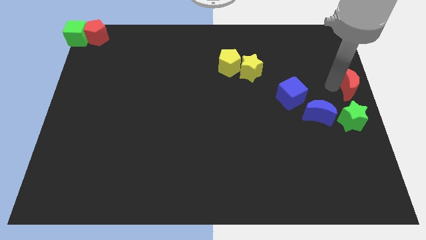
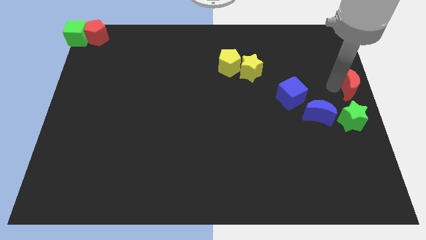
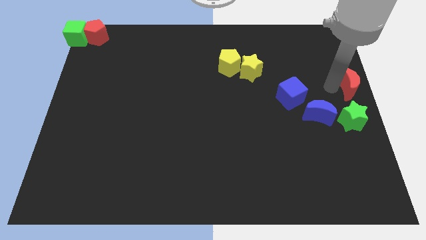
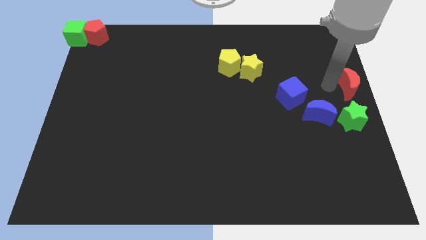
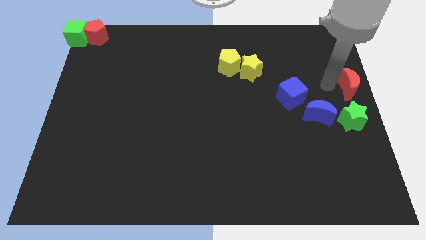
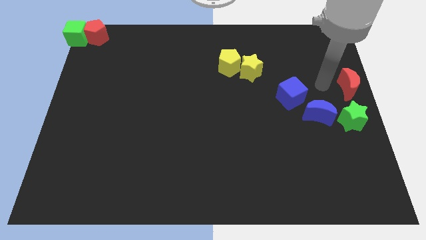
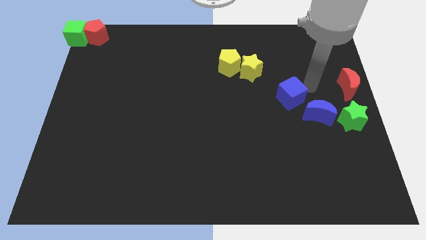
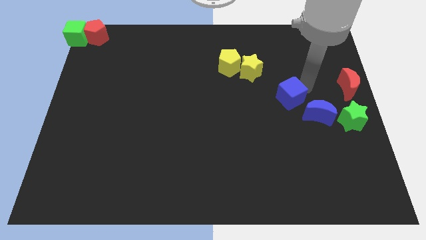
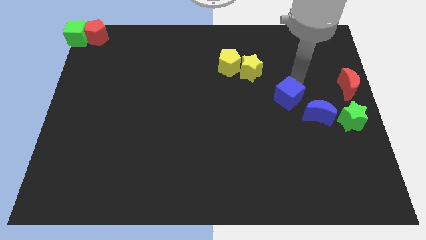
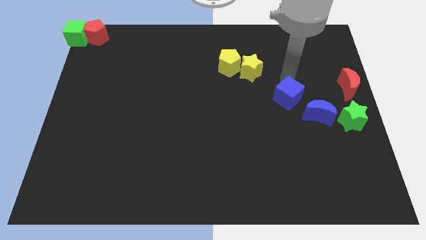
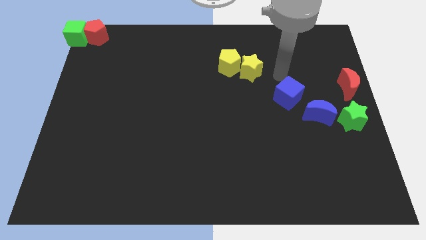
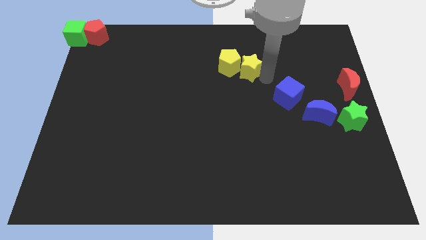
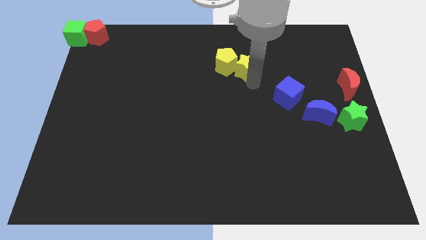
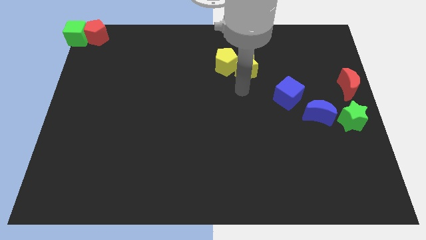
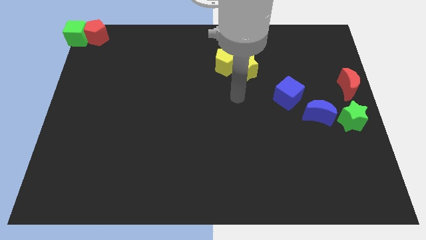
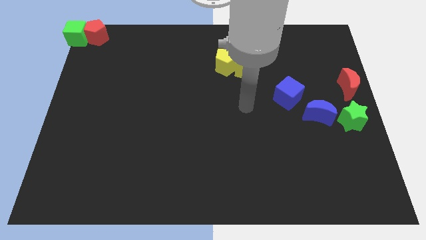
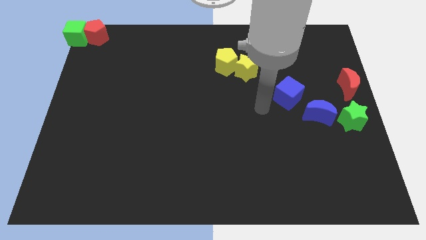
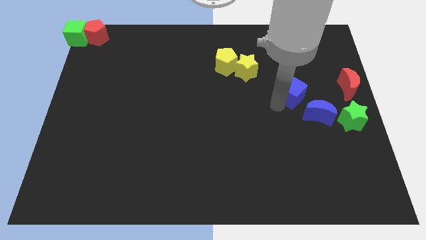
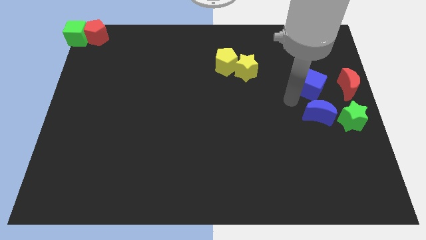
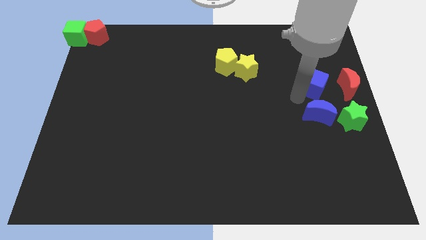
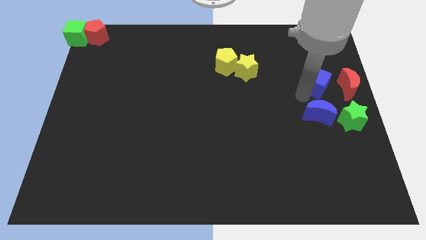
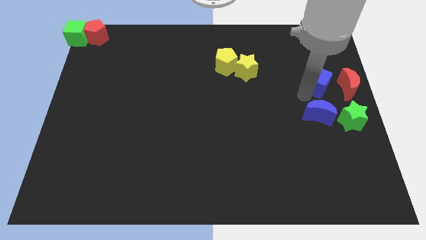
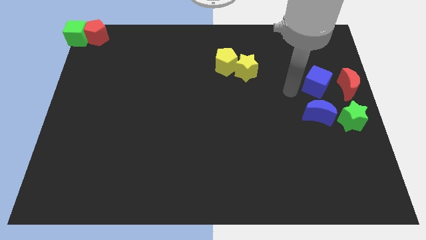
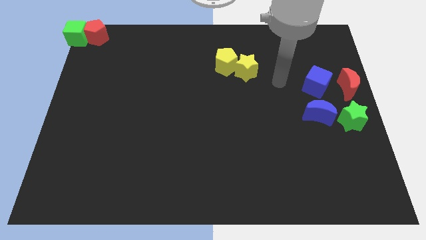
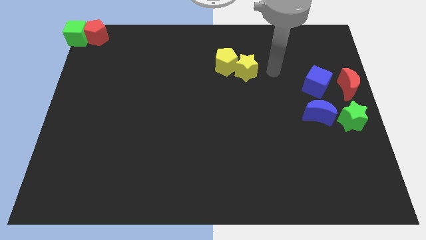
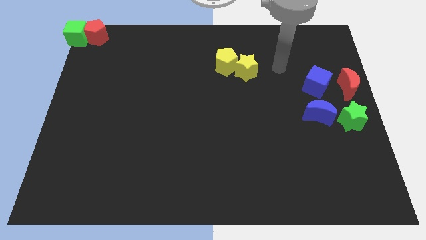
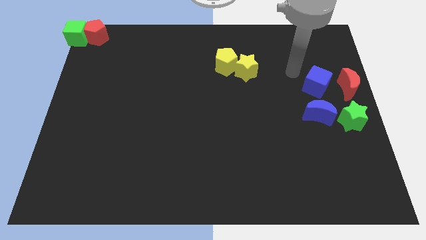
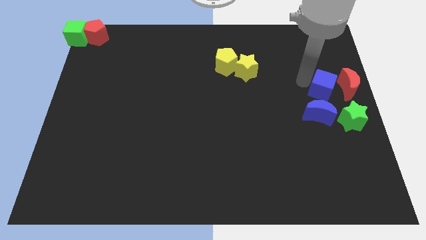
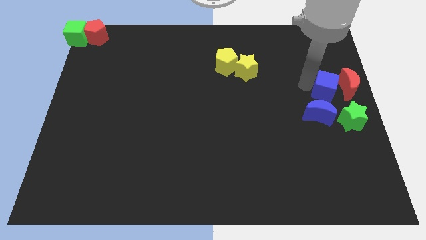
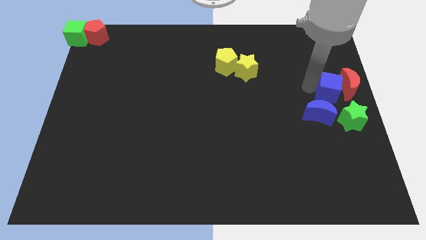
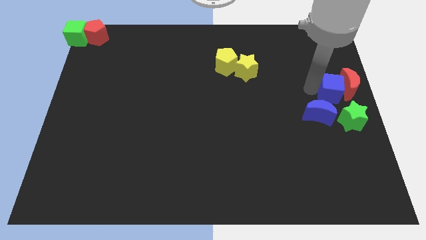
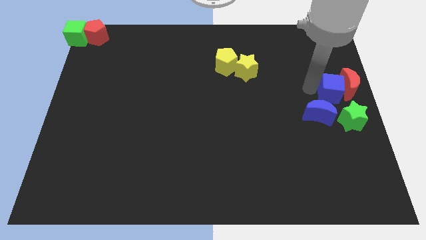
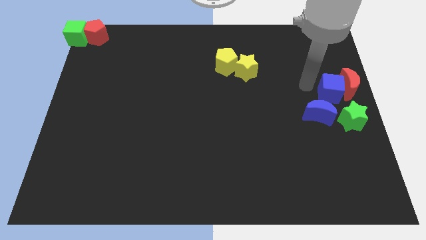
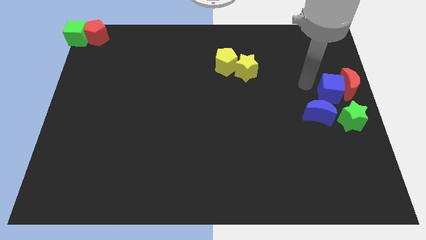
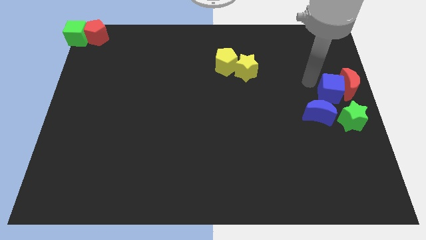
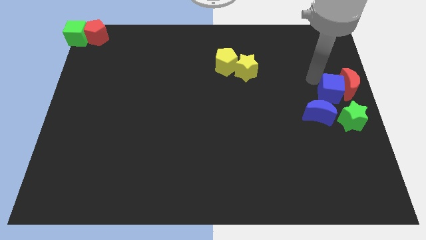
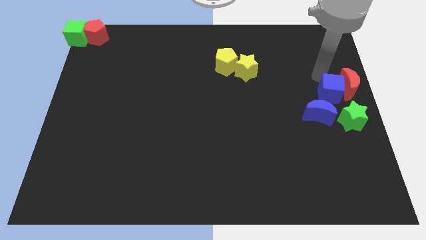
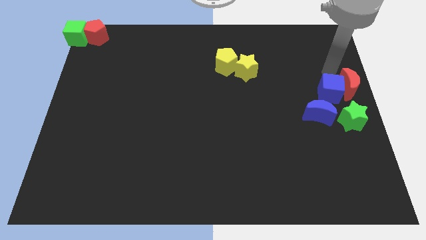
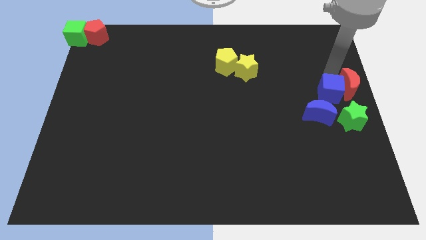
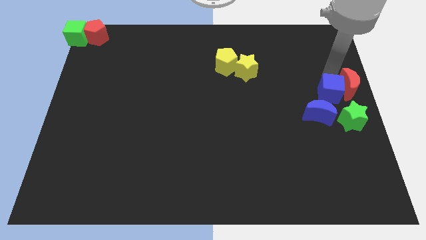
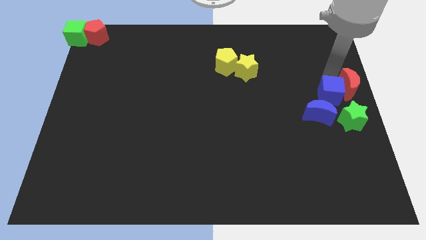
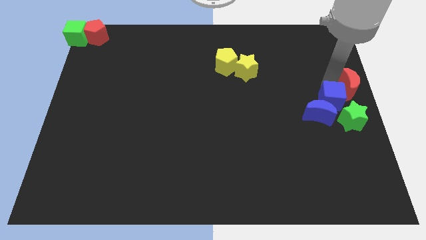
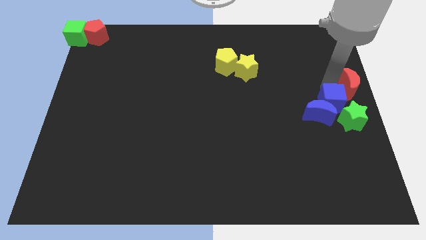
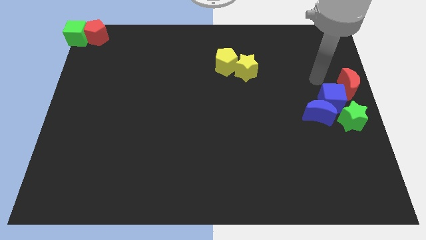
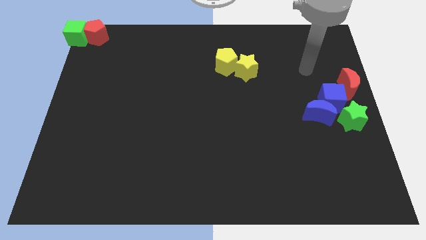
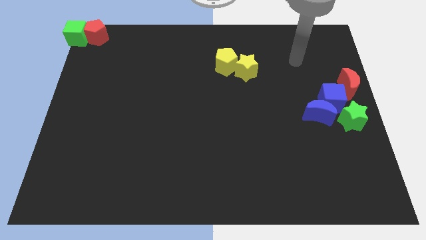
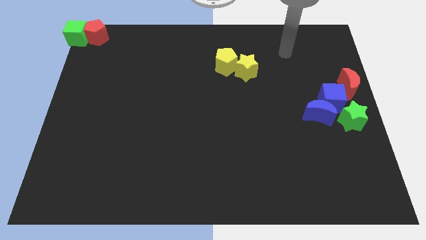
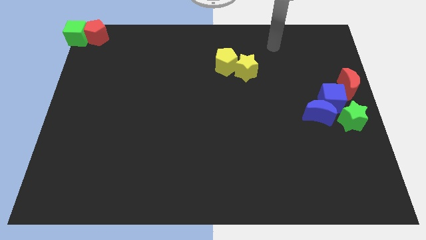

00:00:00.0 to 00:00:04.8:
place blue cube to the top left to green star

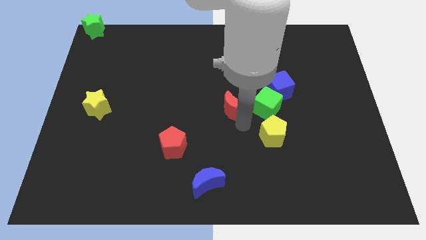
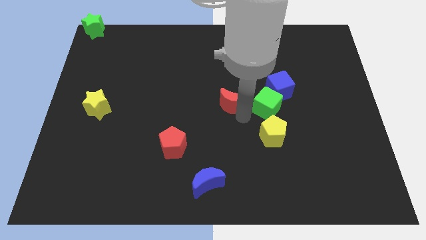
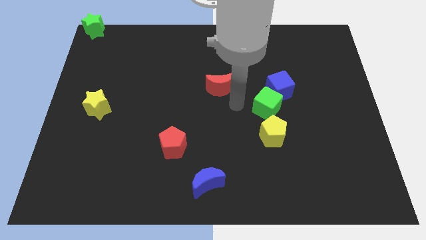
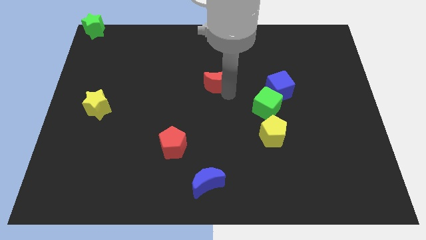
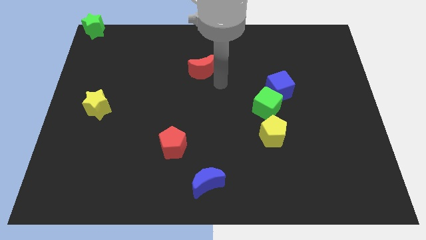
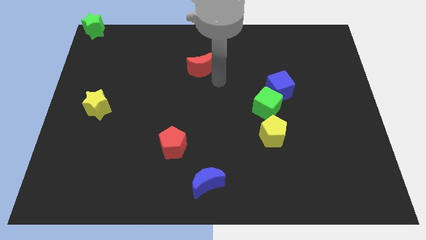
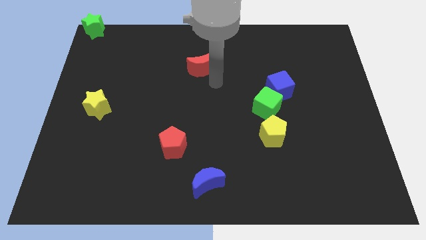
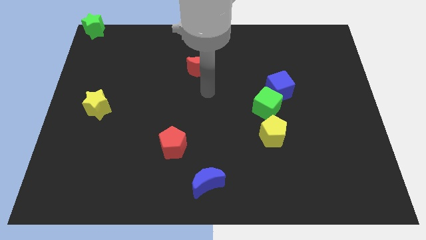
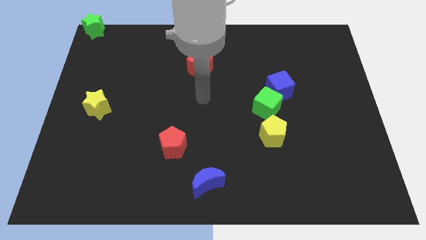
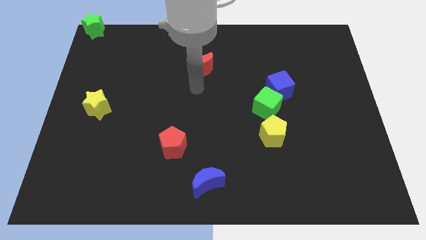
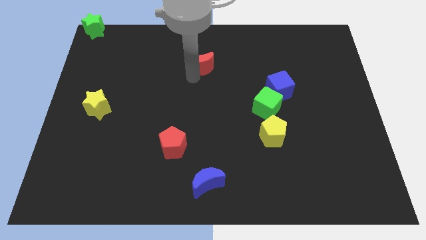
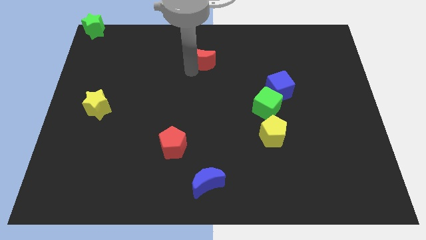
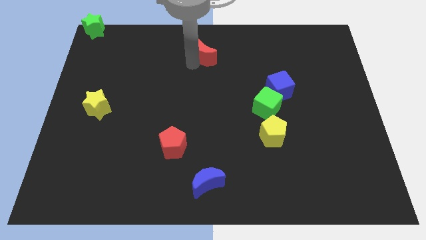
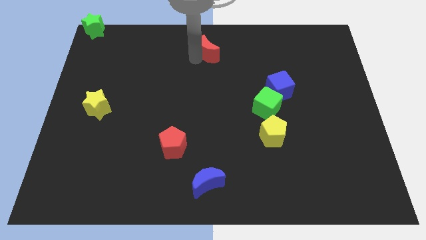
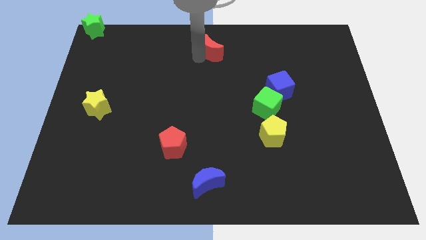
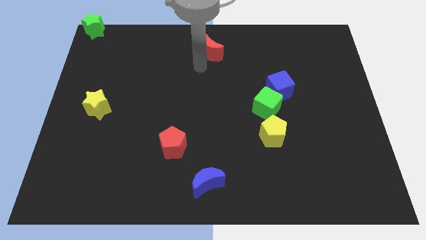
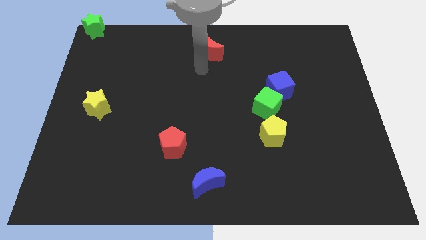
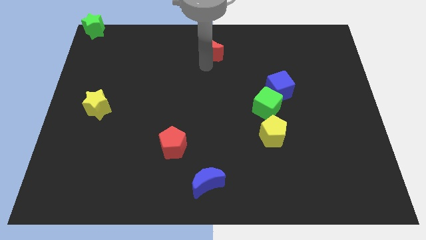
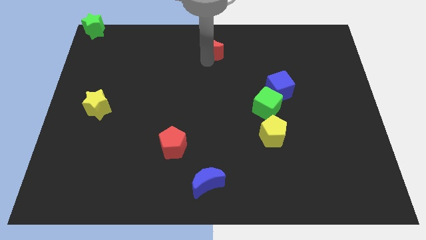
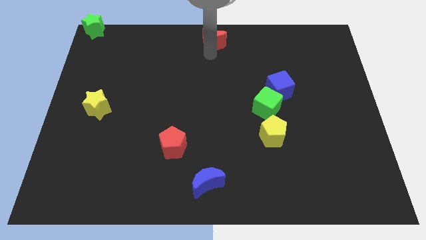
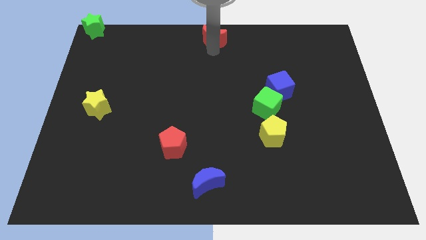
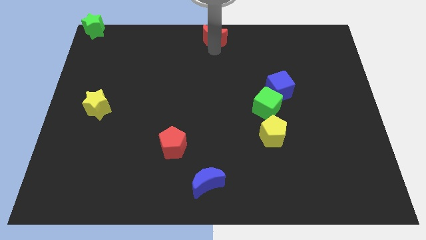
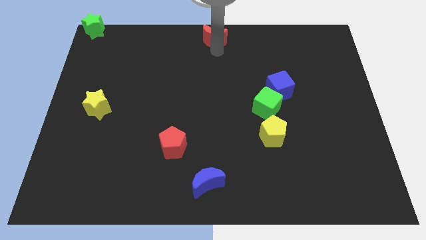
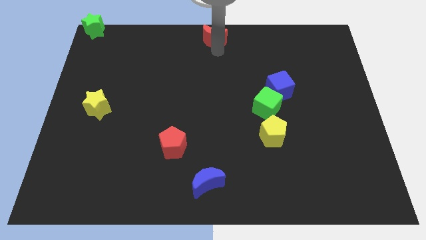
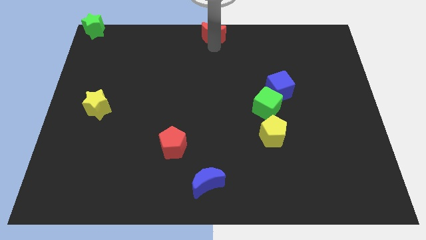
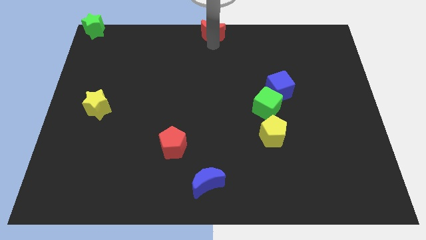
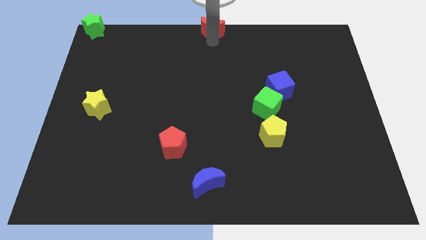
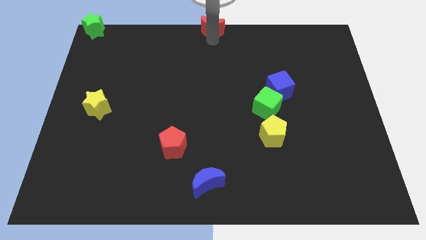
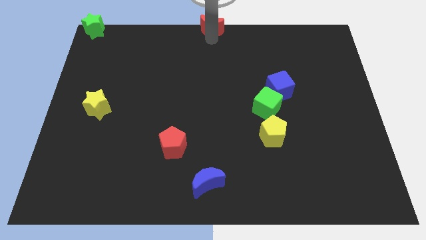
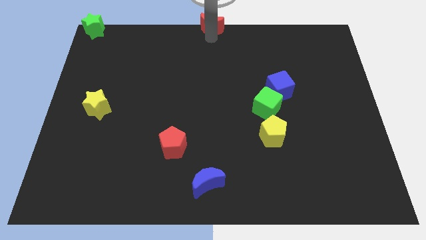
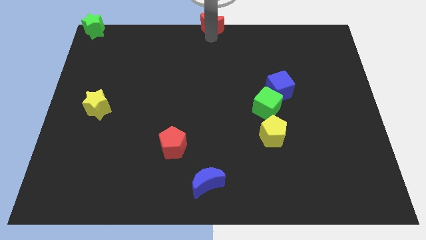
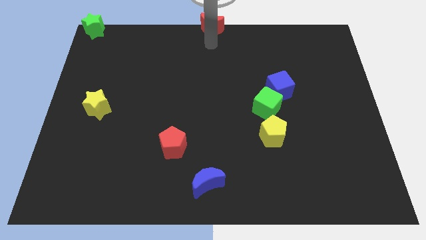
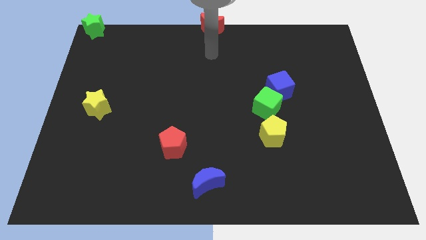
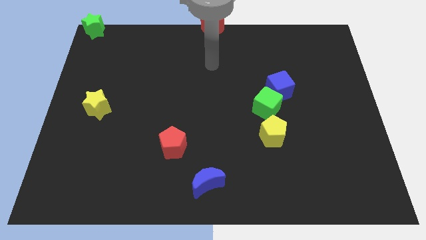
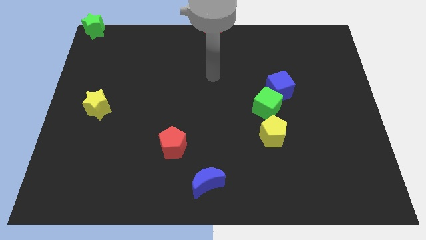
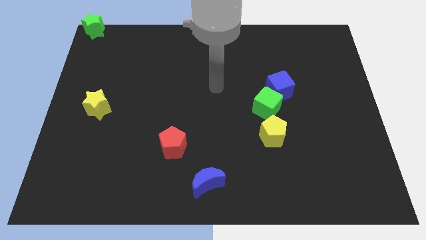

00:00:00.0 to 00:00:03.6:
place the red moon towards the top center of the board

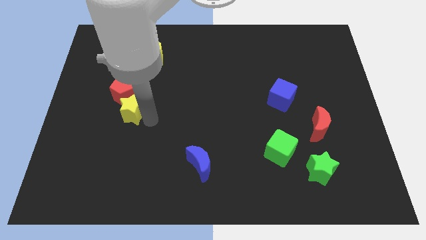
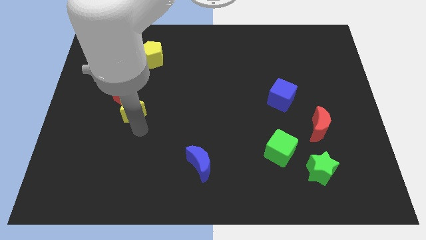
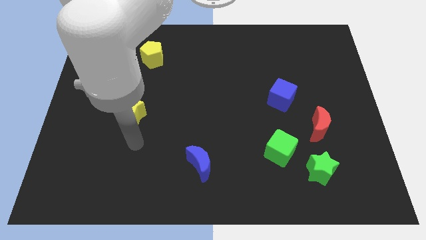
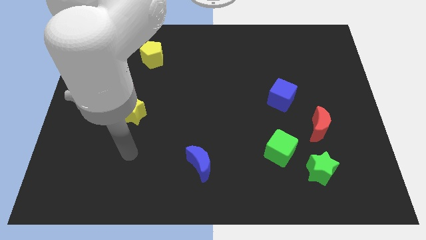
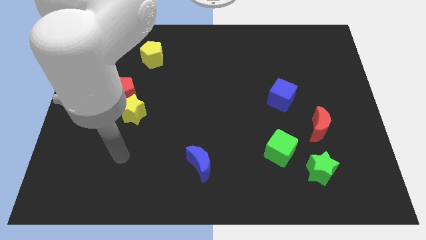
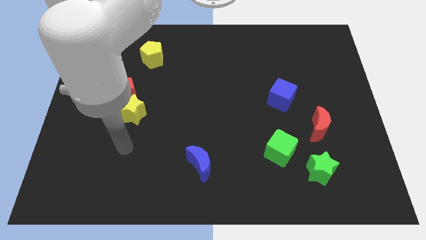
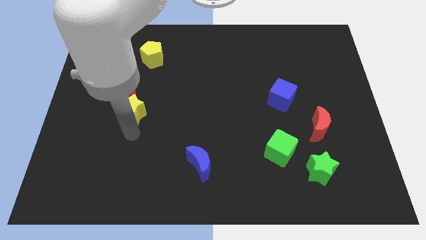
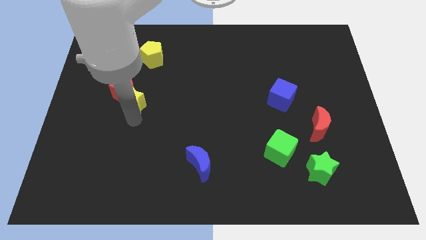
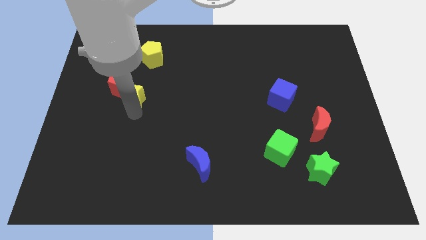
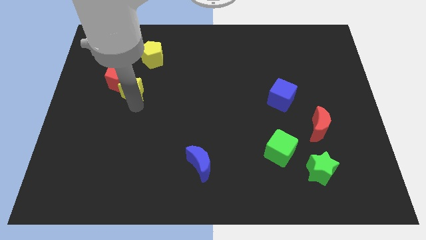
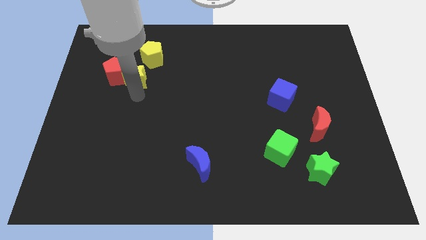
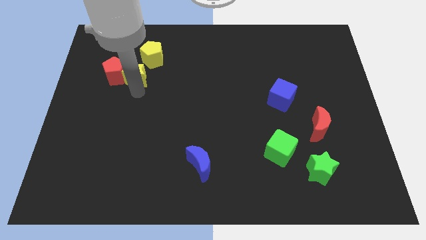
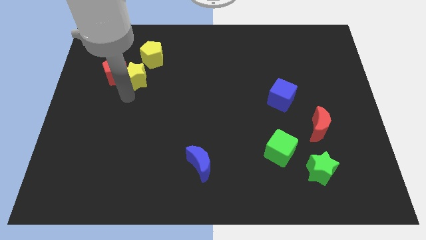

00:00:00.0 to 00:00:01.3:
push the yellow star and red pentagon slightly to the top
